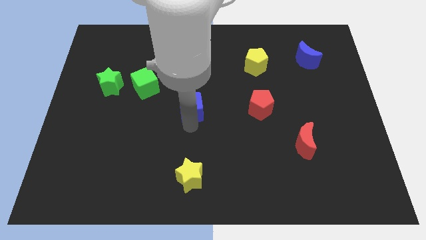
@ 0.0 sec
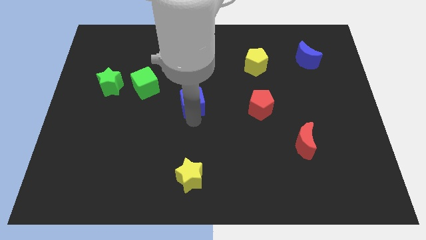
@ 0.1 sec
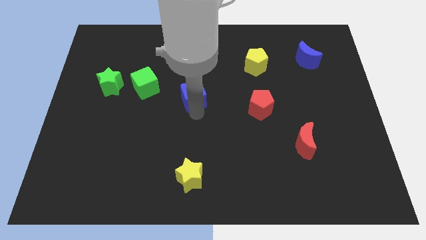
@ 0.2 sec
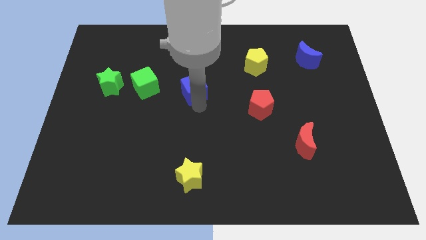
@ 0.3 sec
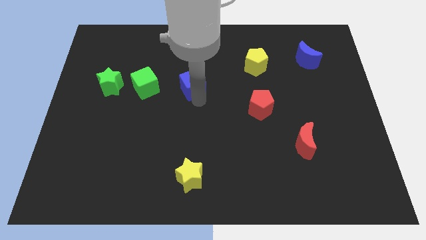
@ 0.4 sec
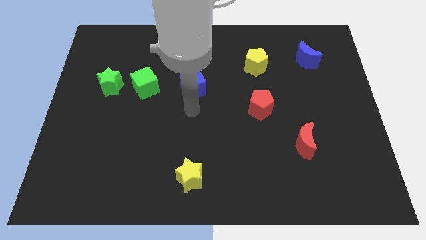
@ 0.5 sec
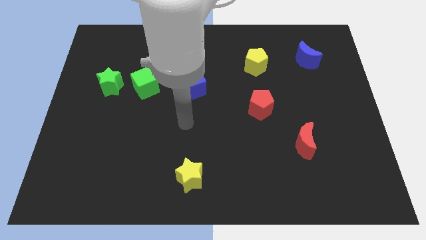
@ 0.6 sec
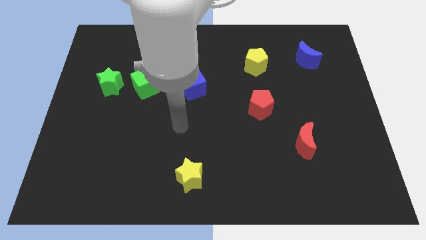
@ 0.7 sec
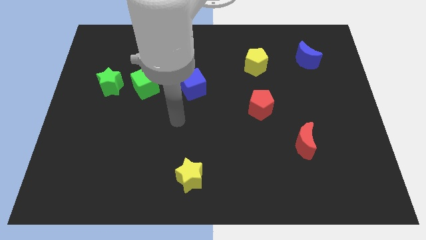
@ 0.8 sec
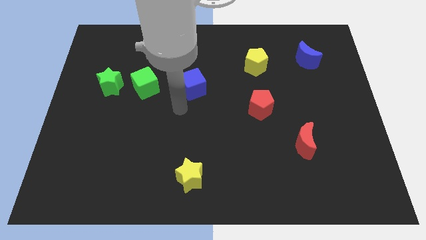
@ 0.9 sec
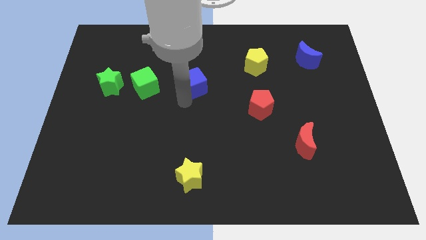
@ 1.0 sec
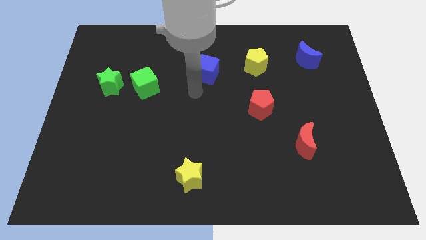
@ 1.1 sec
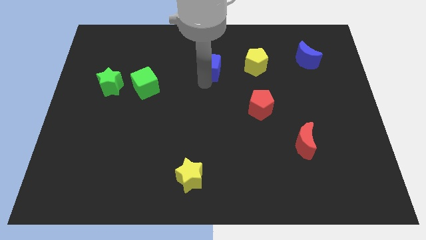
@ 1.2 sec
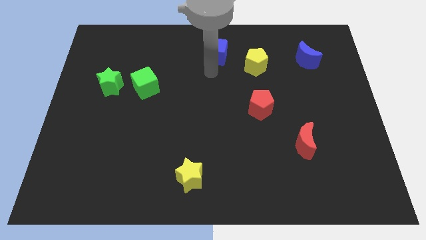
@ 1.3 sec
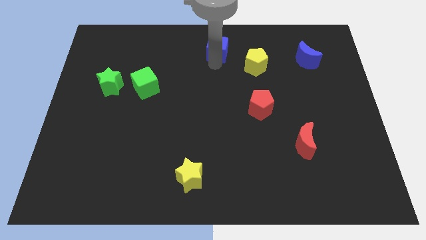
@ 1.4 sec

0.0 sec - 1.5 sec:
place blue cube to the left of yellow pentagon

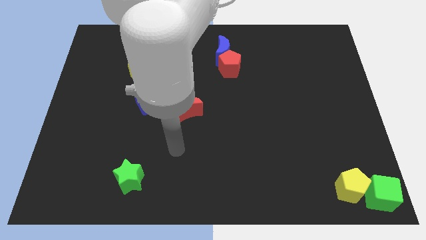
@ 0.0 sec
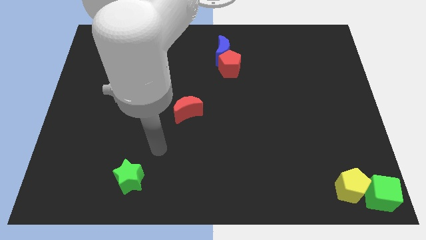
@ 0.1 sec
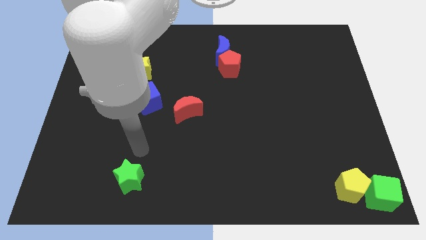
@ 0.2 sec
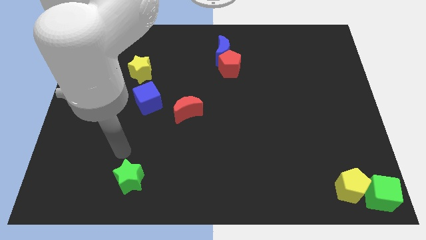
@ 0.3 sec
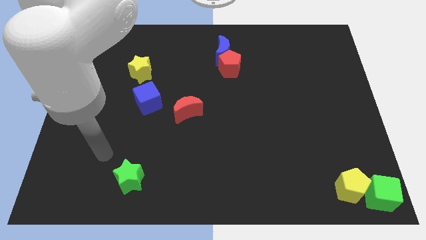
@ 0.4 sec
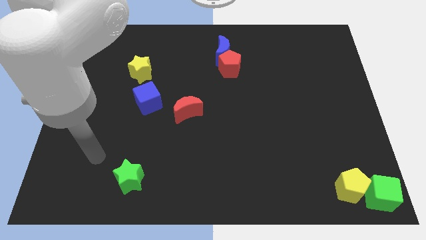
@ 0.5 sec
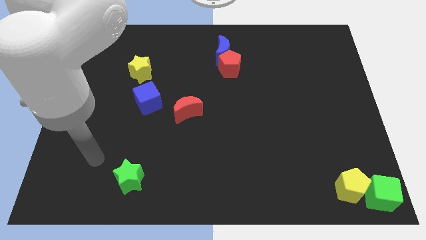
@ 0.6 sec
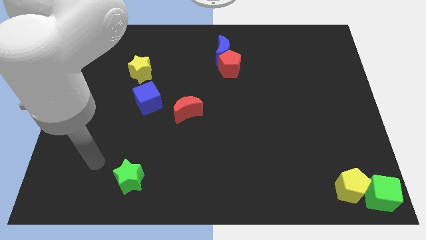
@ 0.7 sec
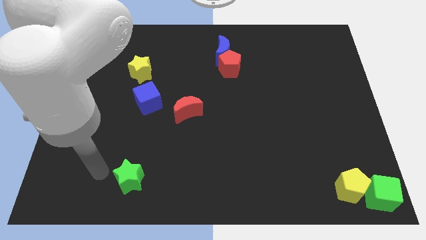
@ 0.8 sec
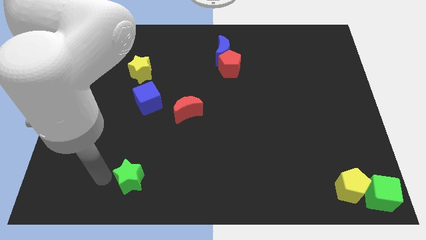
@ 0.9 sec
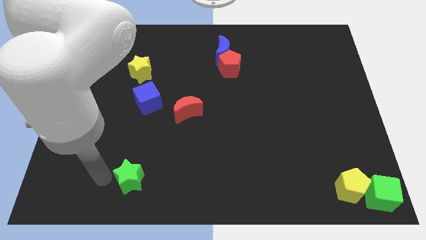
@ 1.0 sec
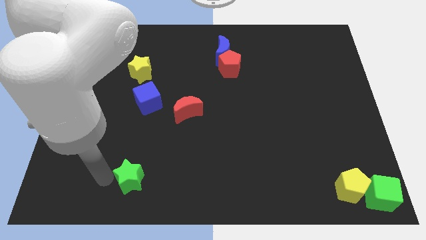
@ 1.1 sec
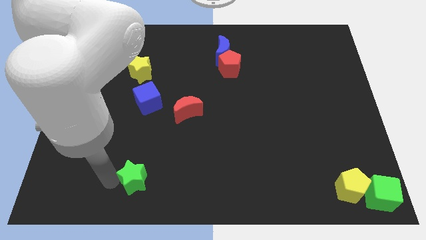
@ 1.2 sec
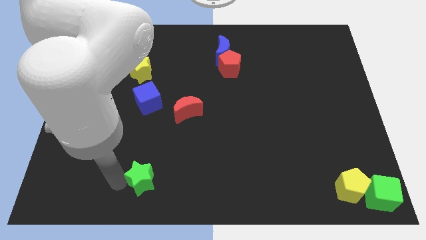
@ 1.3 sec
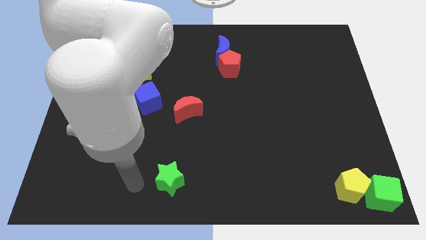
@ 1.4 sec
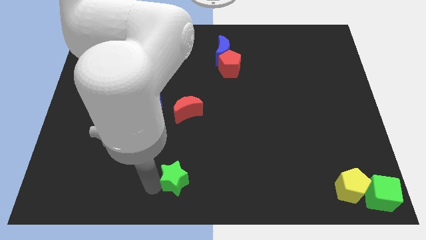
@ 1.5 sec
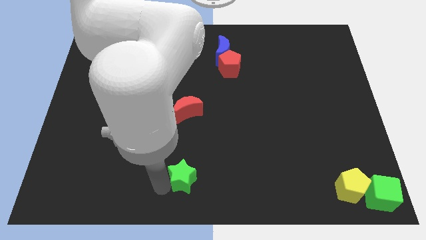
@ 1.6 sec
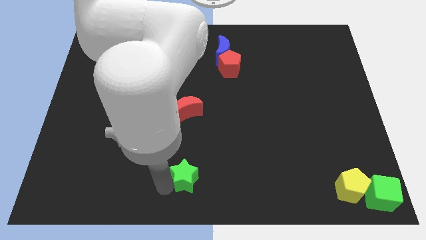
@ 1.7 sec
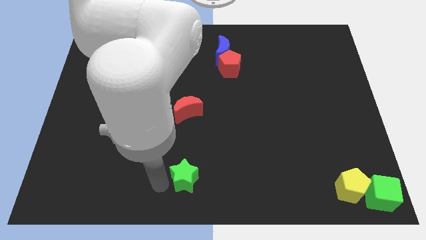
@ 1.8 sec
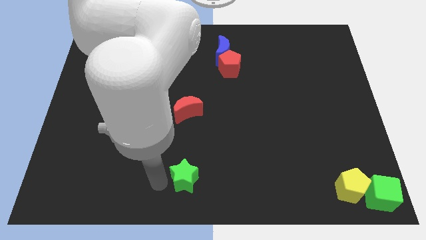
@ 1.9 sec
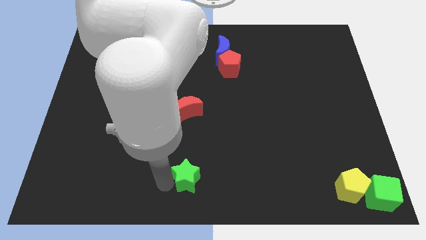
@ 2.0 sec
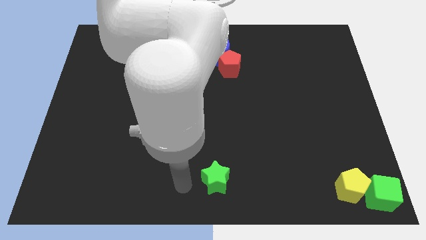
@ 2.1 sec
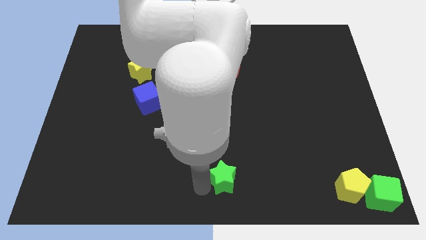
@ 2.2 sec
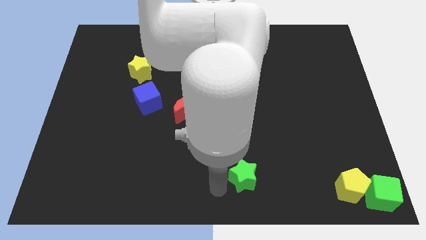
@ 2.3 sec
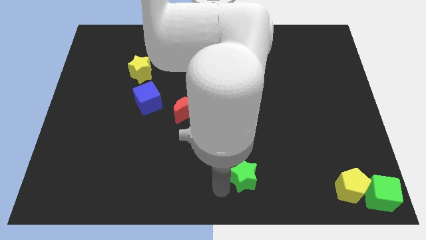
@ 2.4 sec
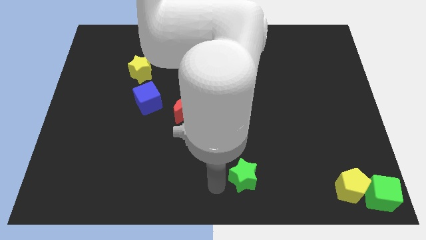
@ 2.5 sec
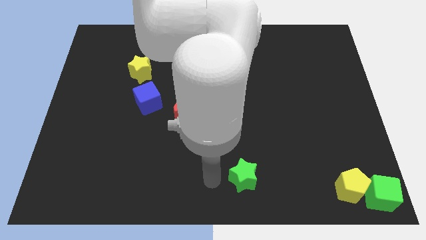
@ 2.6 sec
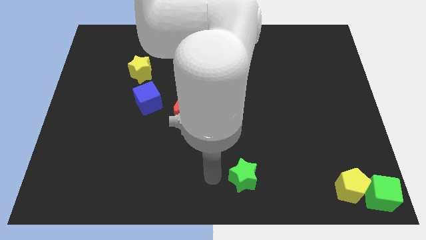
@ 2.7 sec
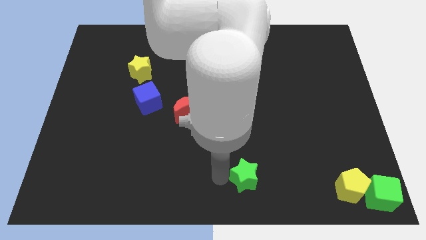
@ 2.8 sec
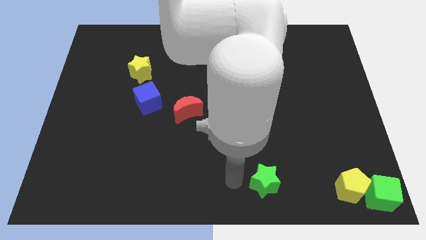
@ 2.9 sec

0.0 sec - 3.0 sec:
push green star below red pentagon

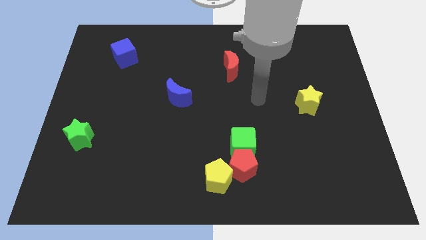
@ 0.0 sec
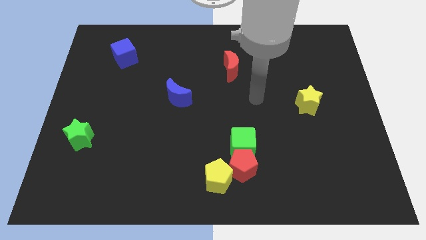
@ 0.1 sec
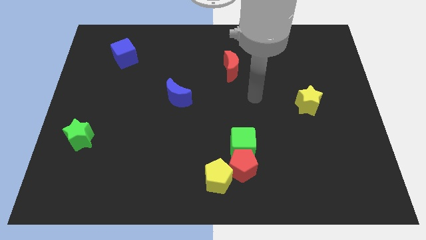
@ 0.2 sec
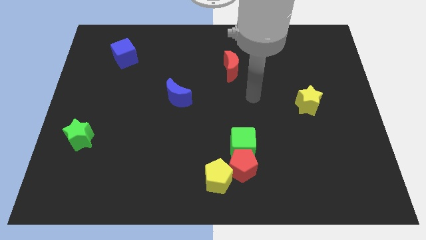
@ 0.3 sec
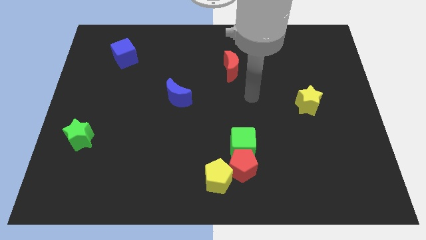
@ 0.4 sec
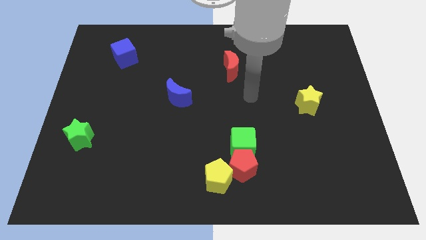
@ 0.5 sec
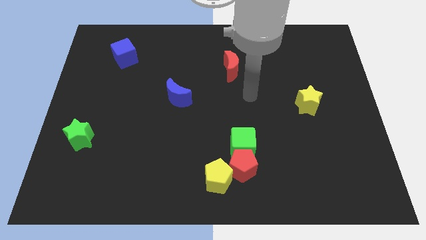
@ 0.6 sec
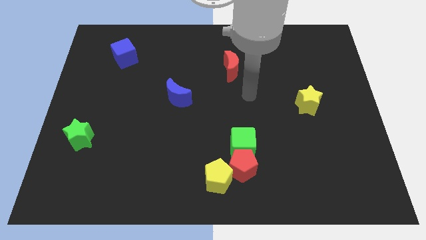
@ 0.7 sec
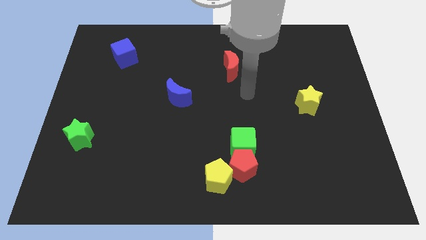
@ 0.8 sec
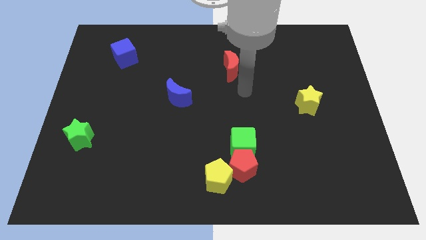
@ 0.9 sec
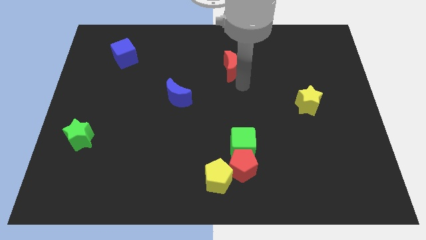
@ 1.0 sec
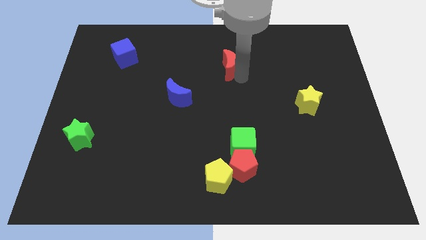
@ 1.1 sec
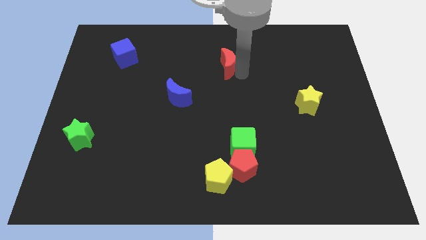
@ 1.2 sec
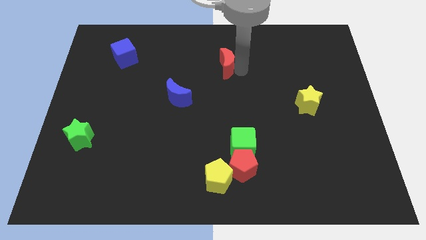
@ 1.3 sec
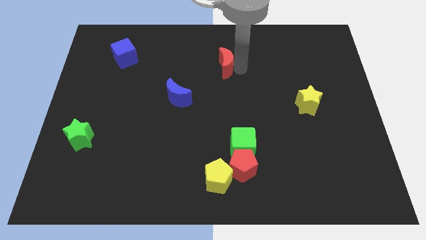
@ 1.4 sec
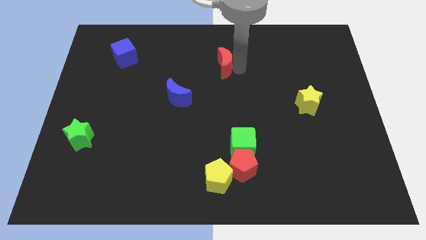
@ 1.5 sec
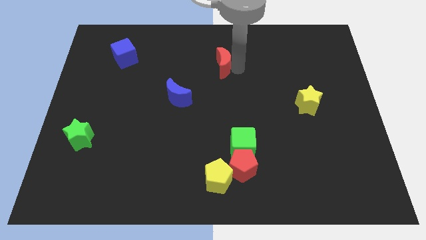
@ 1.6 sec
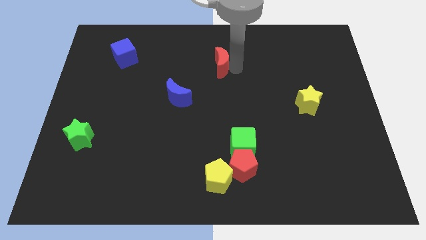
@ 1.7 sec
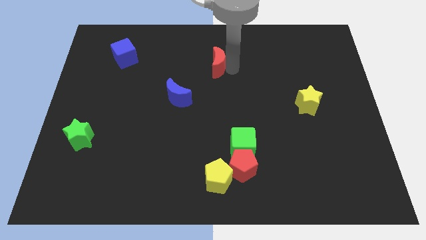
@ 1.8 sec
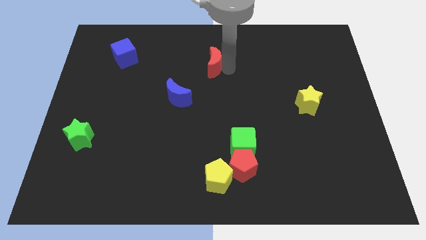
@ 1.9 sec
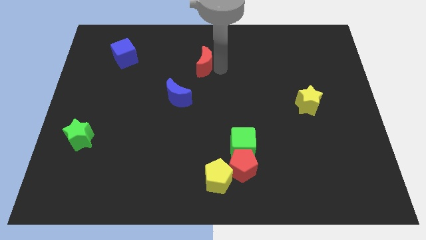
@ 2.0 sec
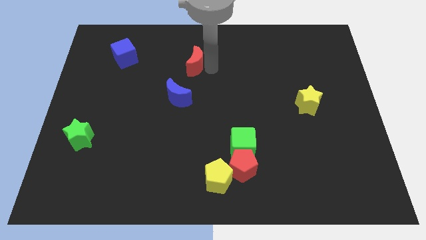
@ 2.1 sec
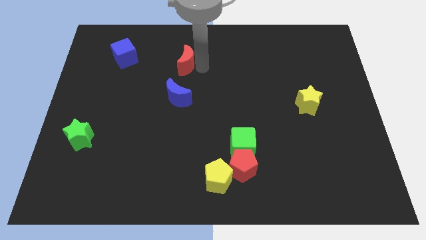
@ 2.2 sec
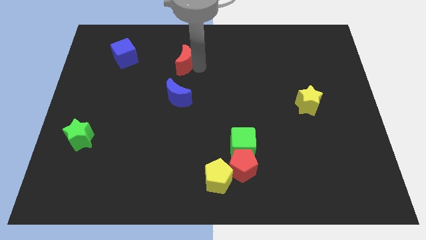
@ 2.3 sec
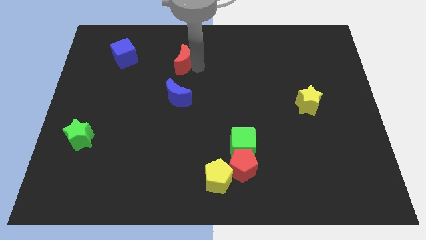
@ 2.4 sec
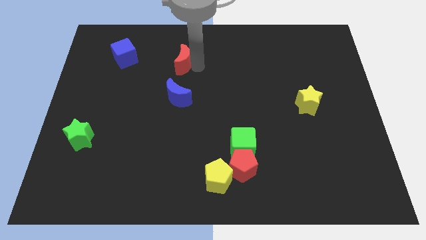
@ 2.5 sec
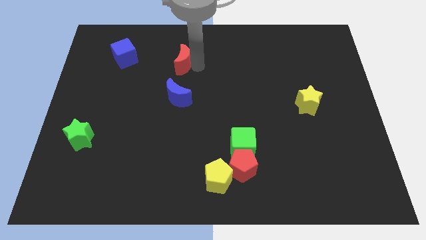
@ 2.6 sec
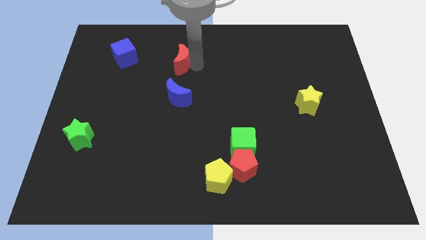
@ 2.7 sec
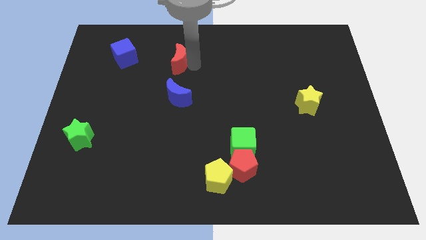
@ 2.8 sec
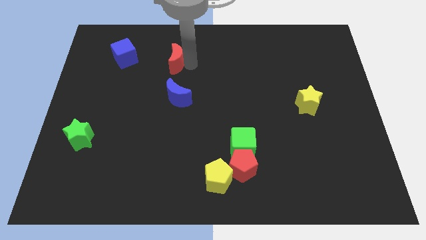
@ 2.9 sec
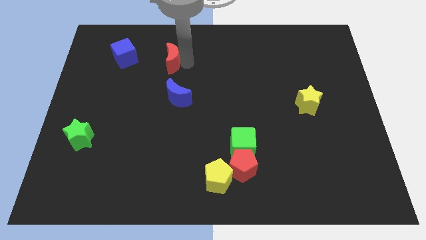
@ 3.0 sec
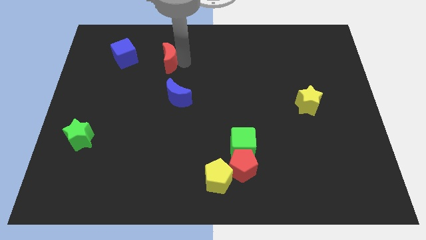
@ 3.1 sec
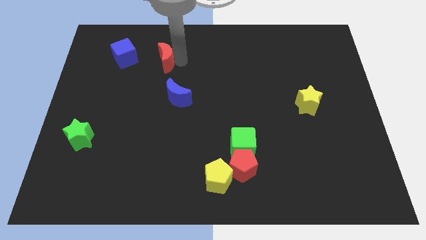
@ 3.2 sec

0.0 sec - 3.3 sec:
move the red moon towards the blue cube

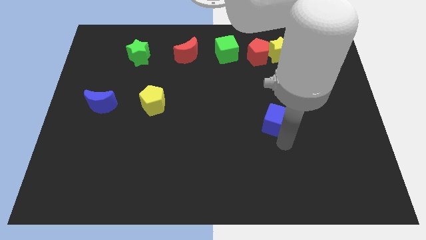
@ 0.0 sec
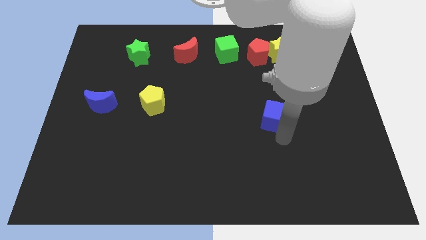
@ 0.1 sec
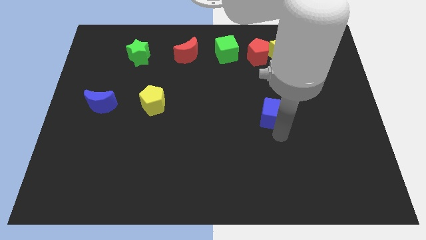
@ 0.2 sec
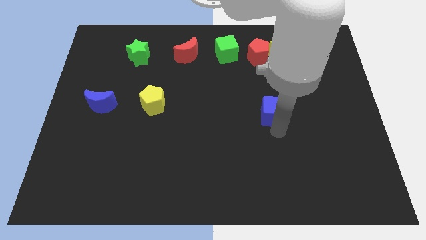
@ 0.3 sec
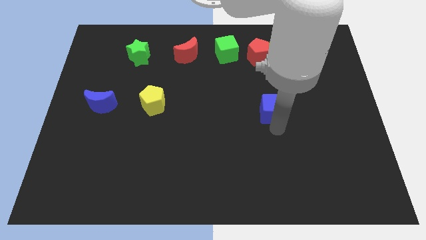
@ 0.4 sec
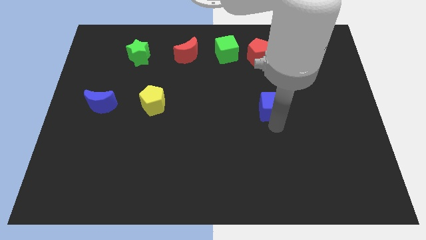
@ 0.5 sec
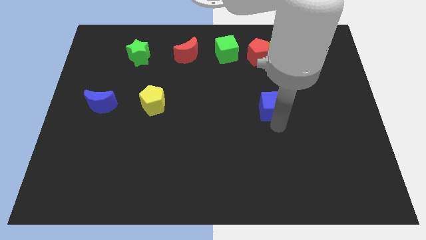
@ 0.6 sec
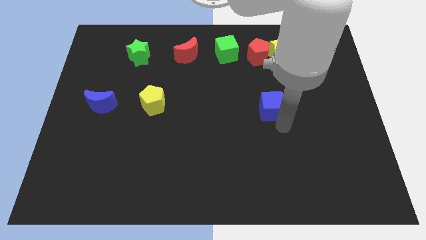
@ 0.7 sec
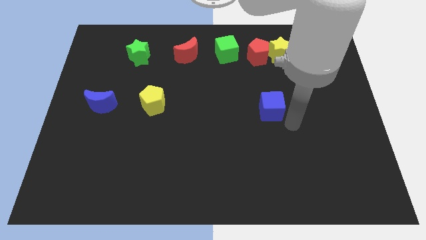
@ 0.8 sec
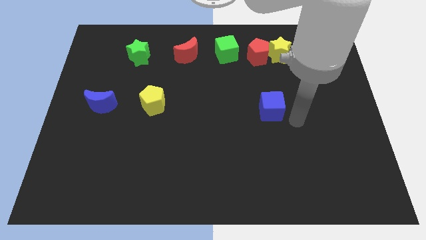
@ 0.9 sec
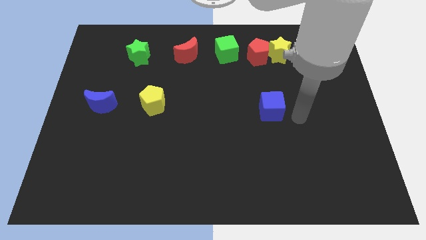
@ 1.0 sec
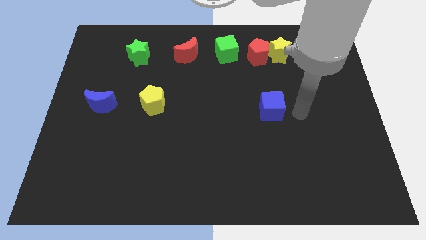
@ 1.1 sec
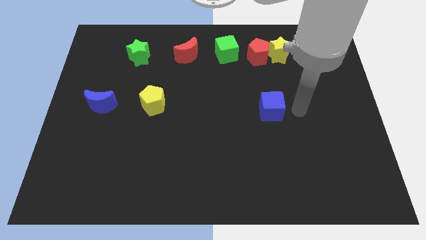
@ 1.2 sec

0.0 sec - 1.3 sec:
push the blue cube upwards a bit
